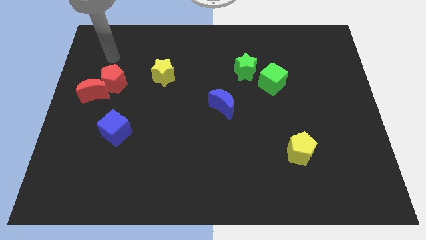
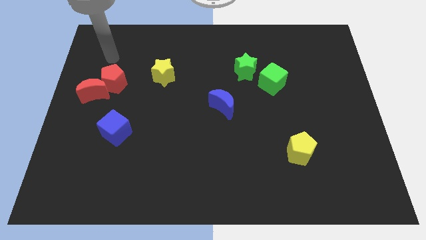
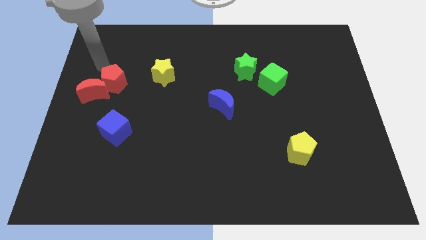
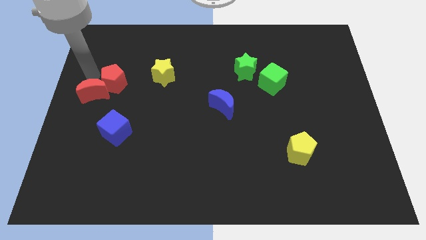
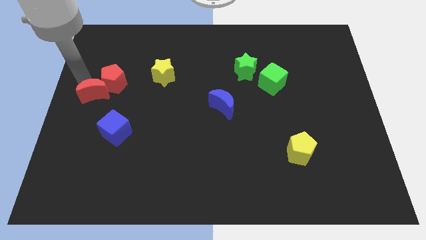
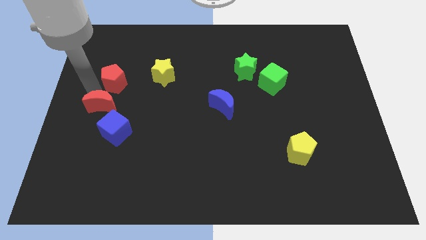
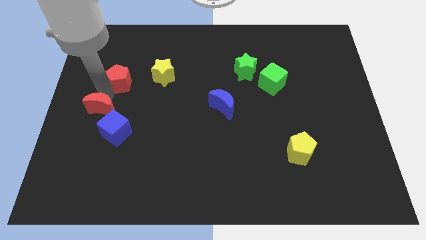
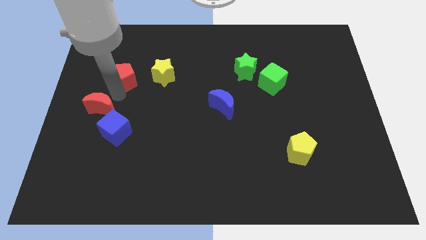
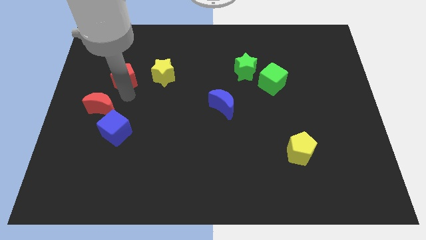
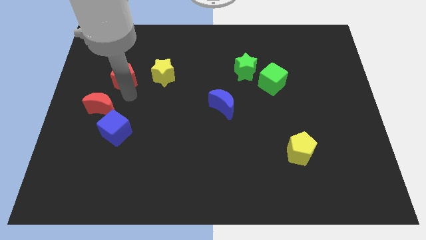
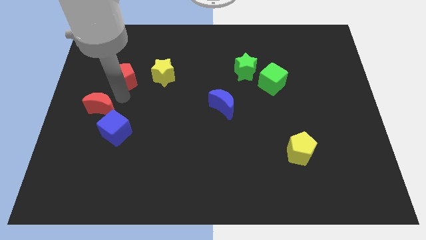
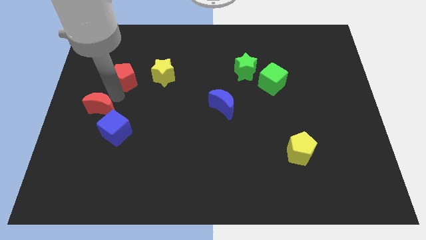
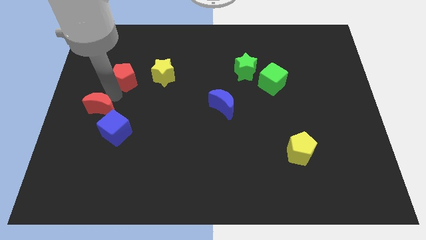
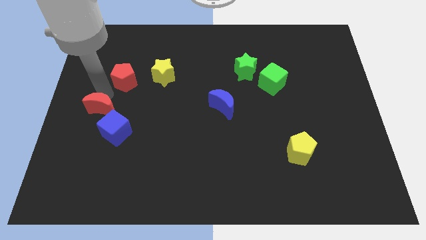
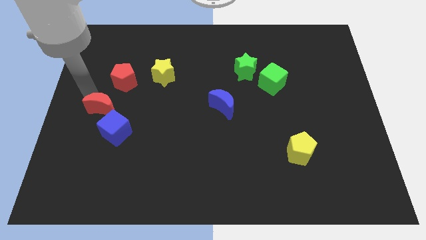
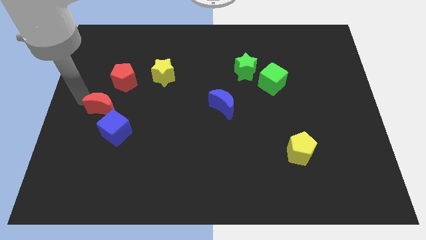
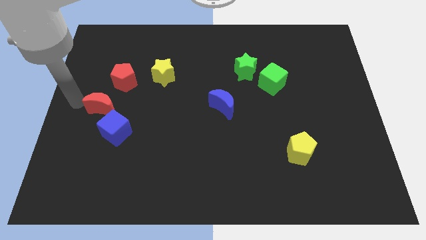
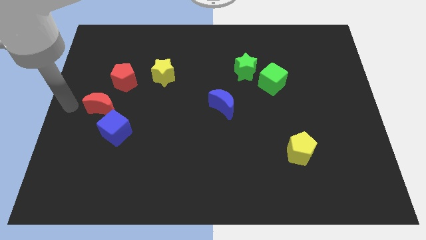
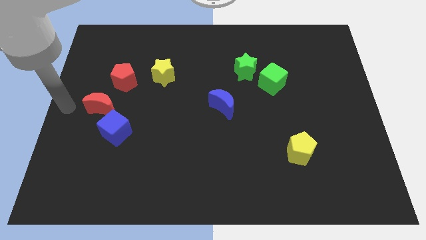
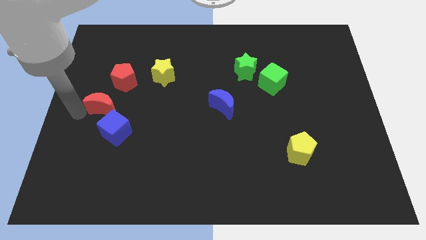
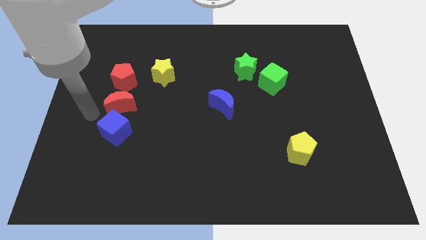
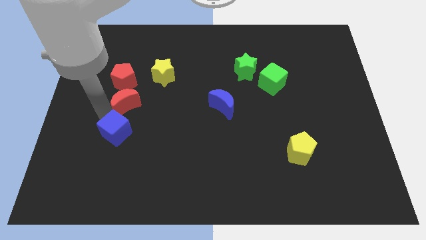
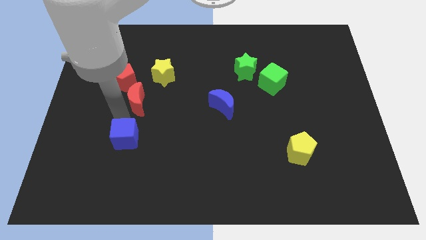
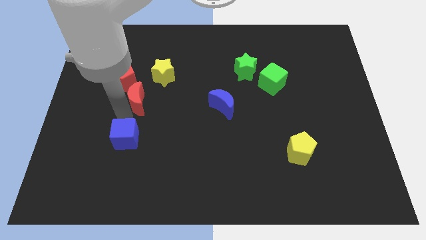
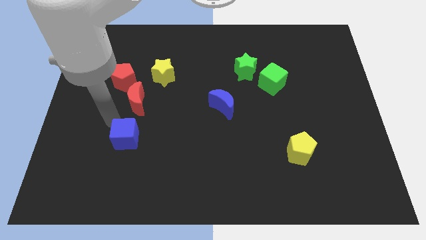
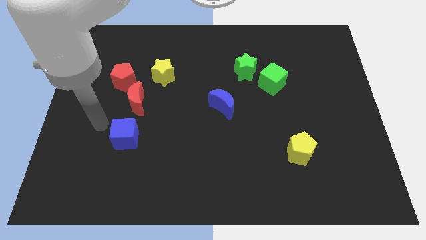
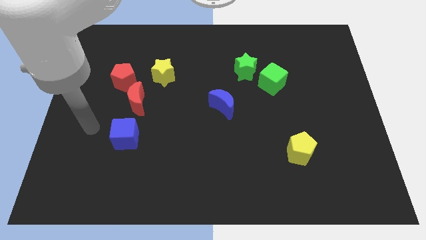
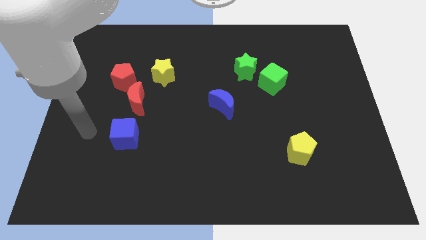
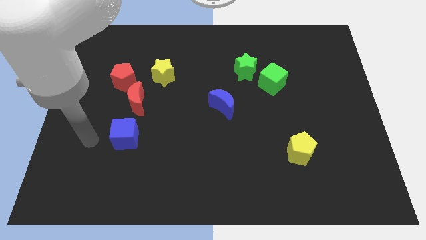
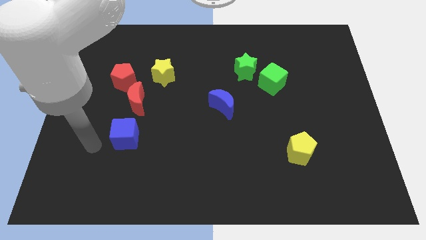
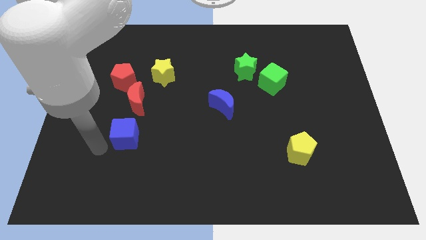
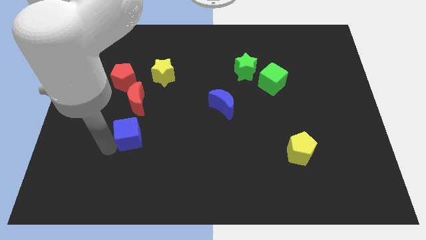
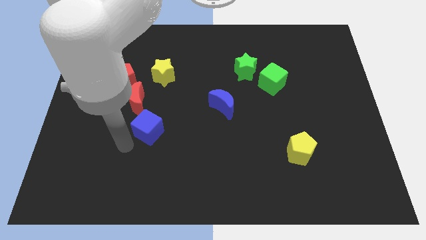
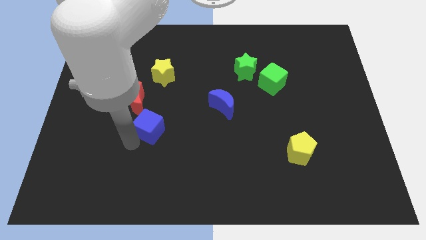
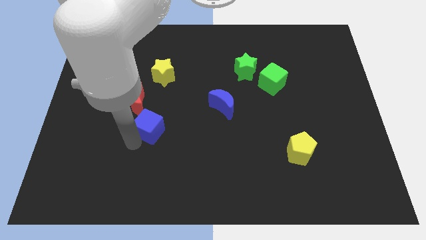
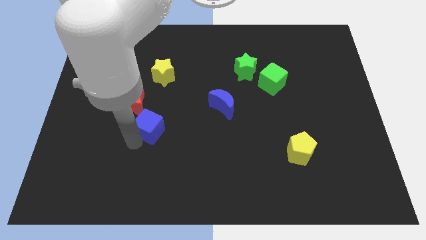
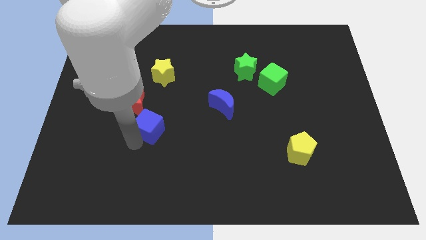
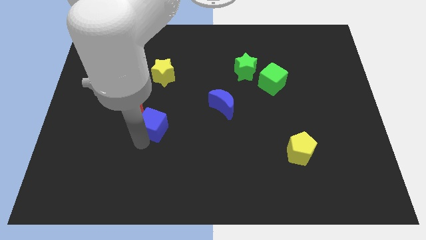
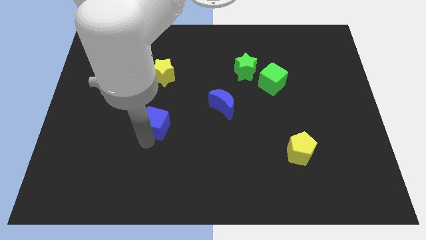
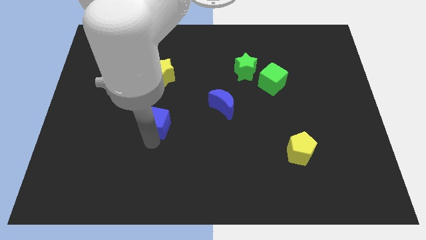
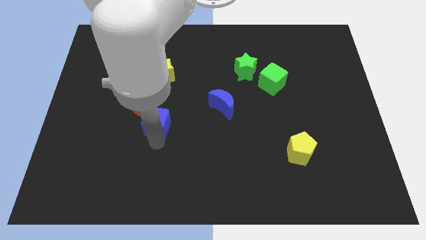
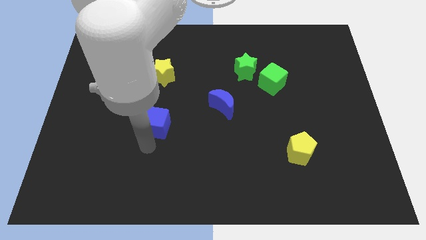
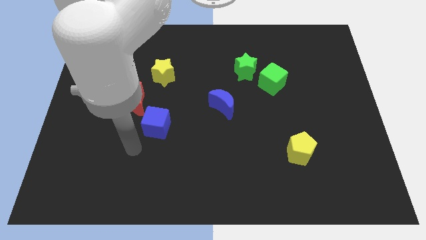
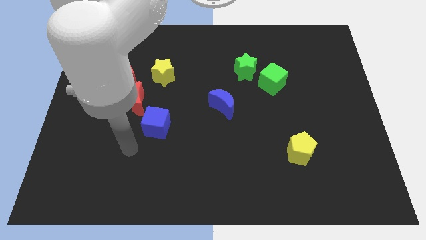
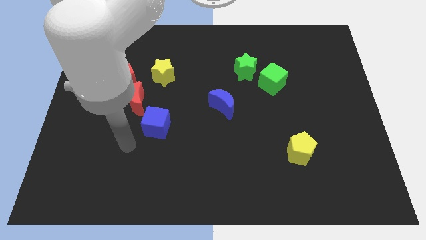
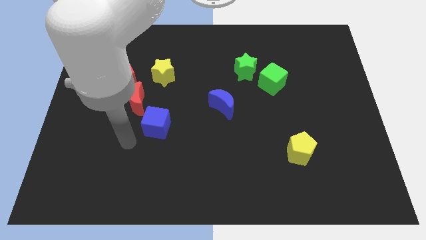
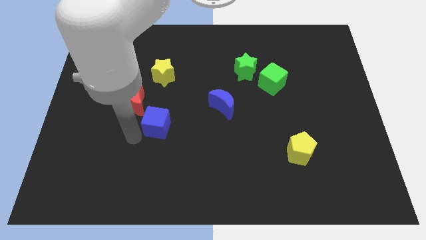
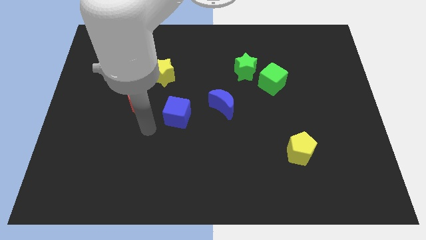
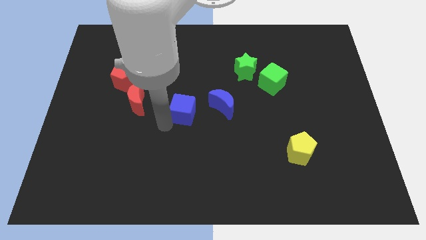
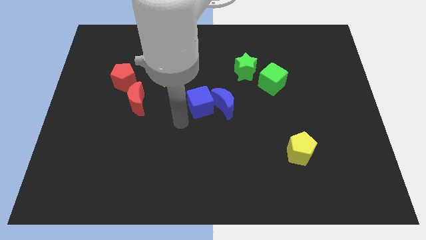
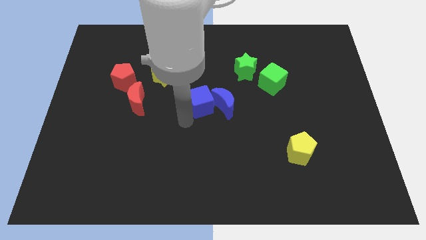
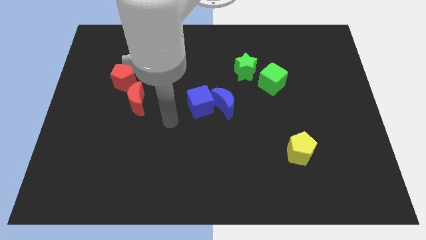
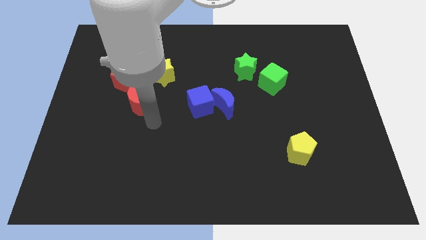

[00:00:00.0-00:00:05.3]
push blue cube into the blue crescent

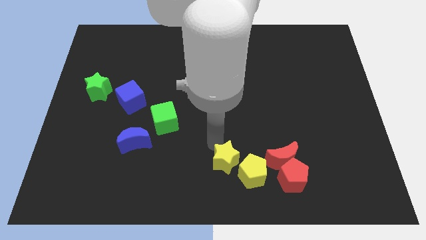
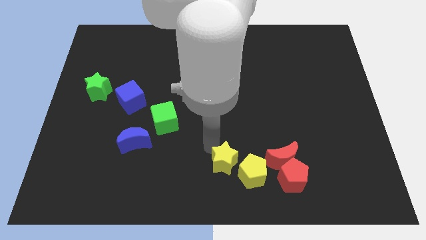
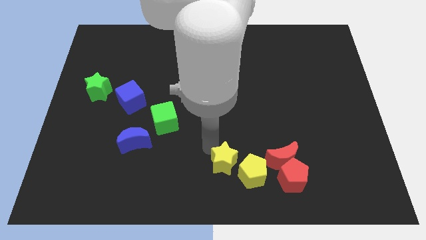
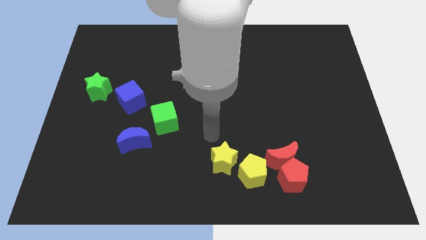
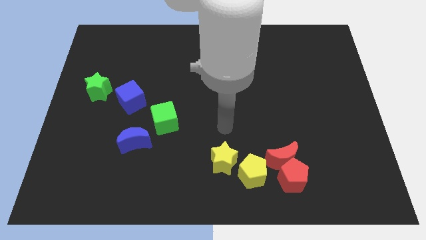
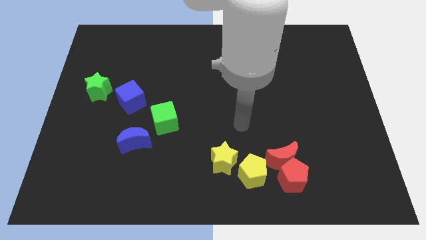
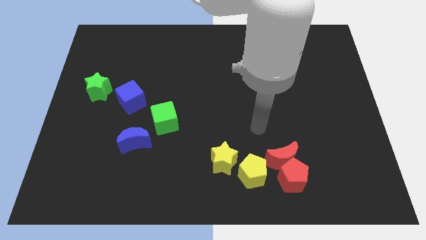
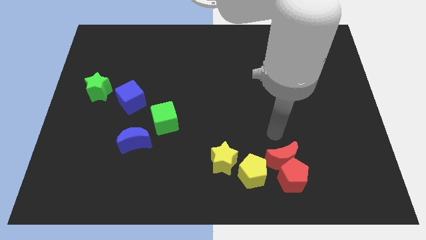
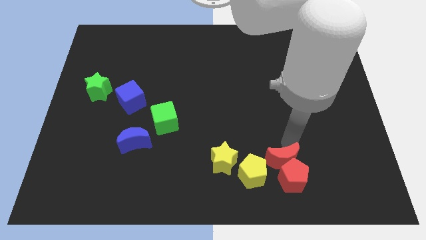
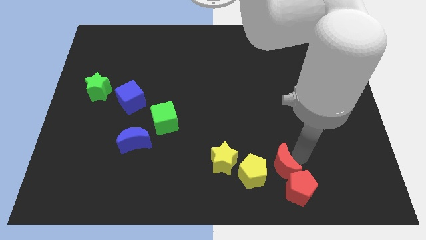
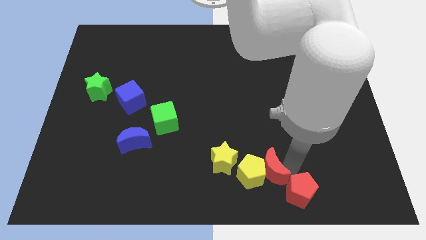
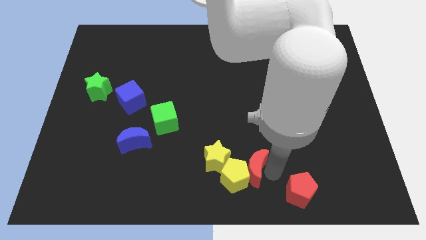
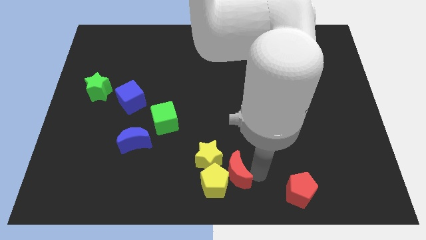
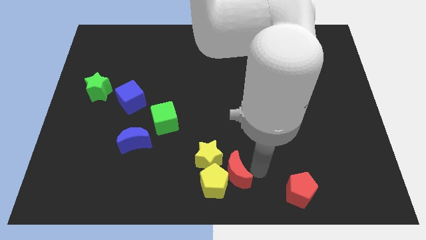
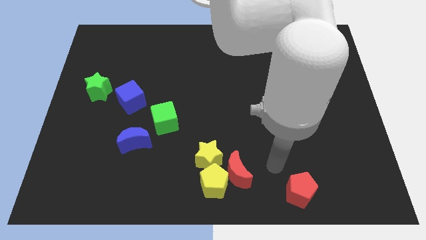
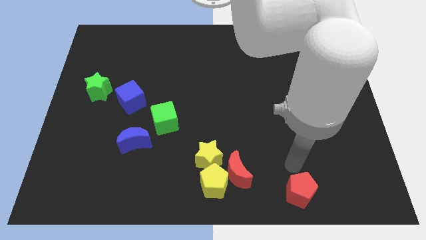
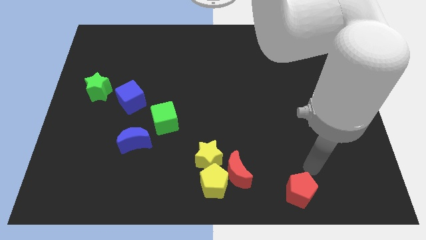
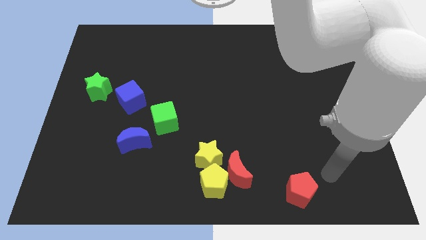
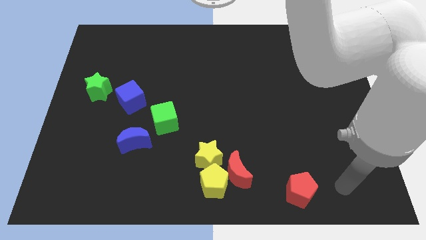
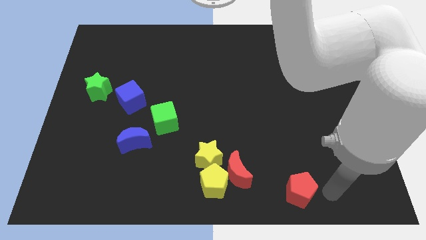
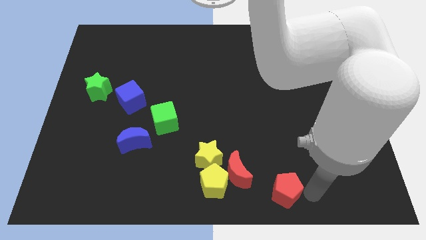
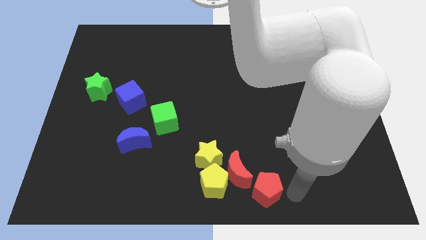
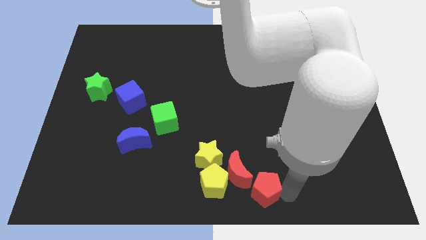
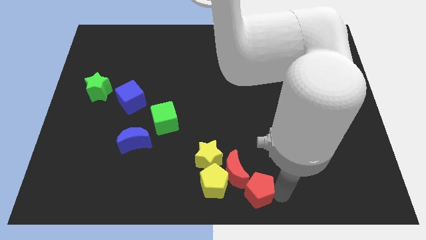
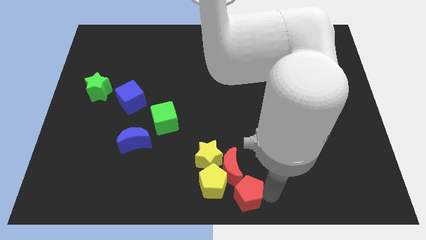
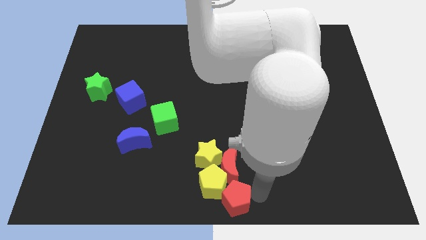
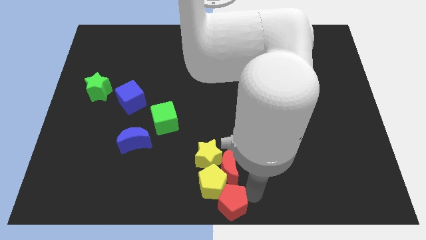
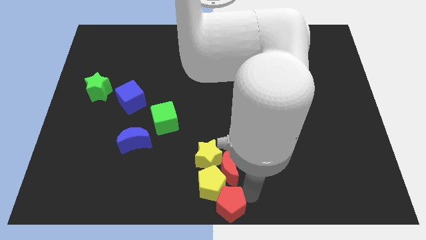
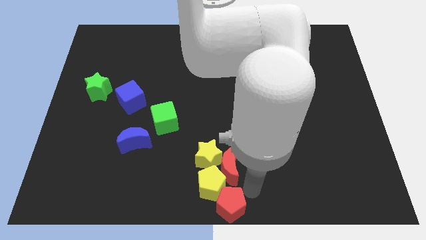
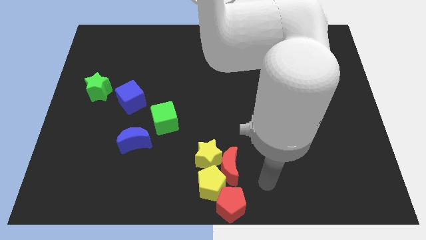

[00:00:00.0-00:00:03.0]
push red moon to the left

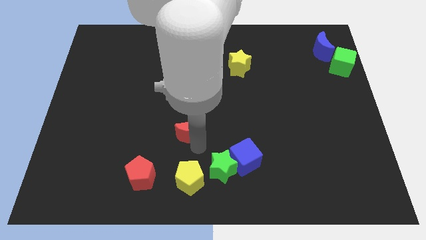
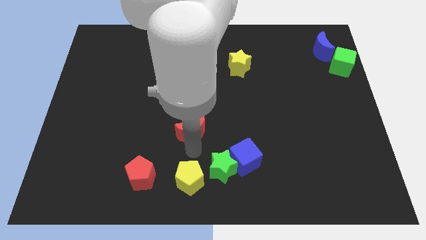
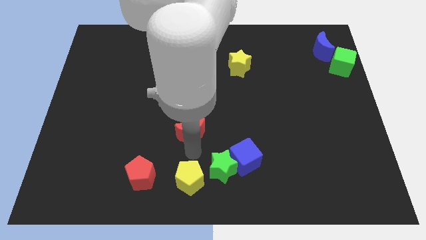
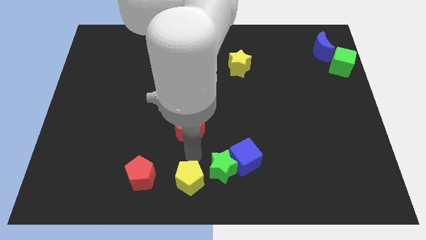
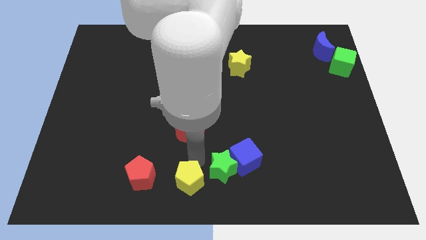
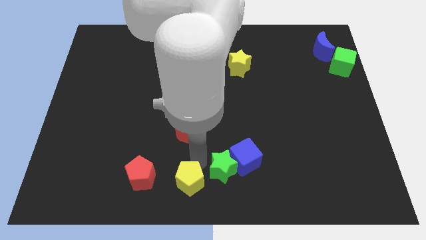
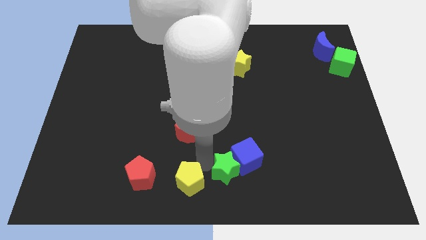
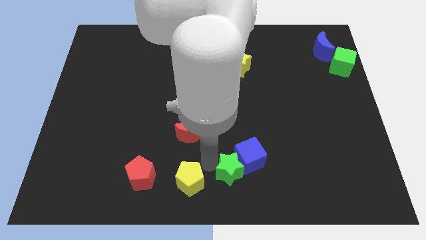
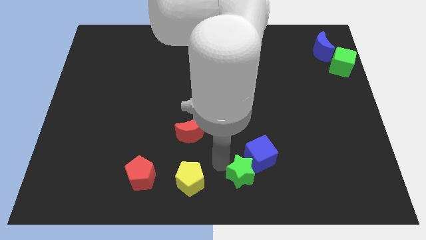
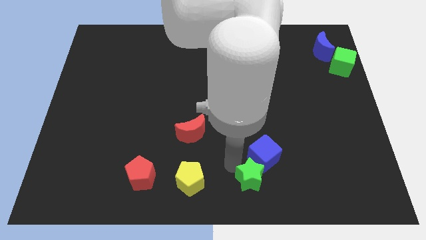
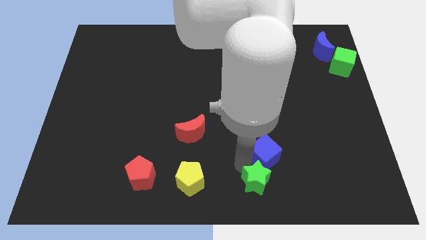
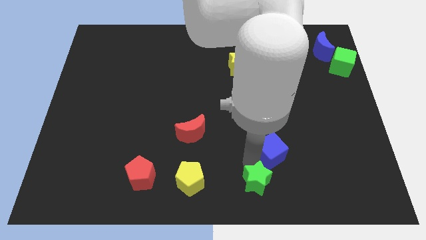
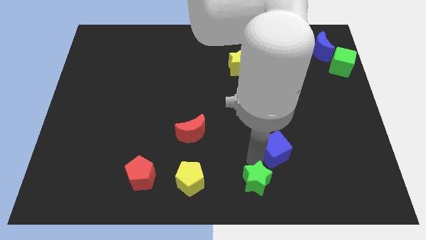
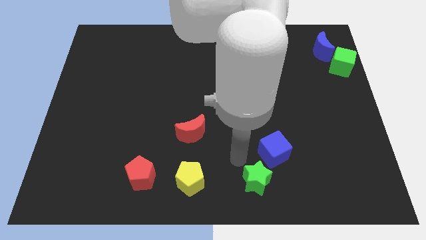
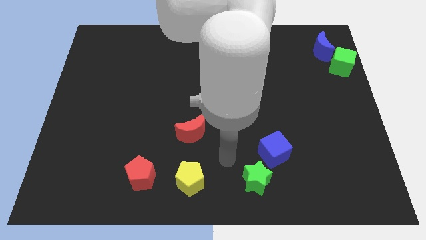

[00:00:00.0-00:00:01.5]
slide the green star slightly to the right
